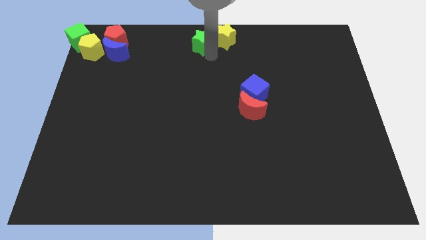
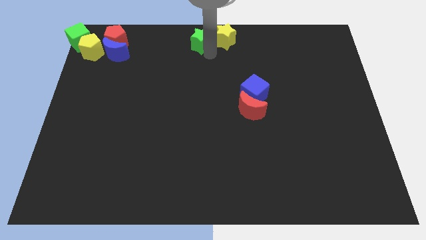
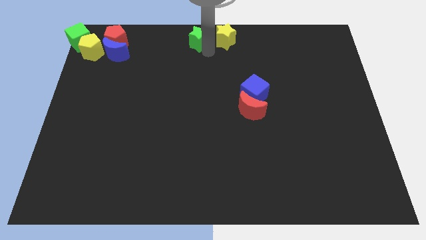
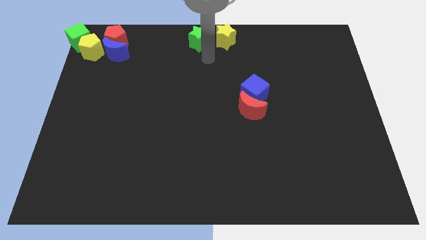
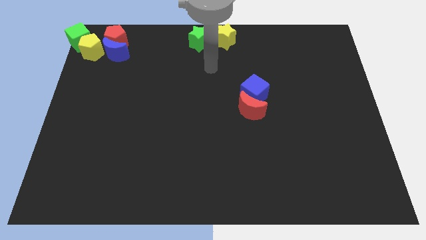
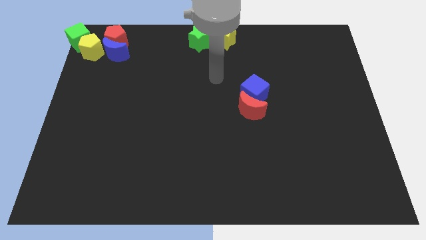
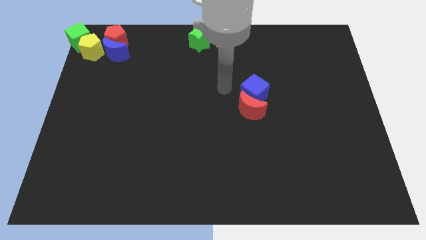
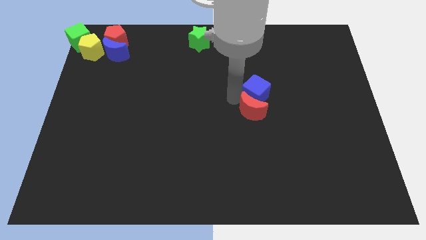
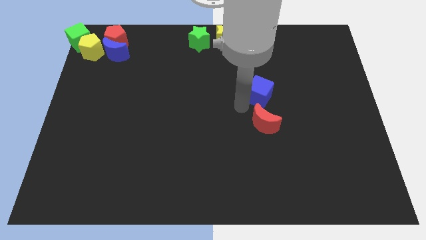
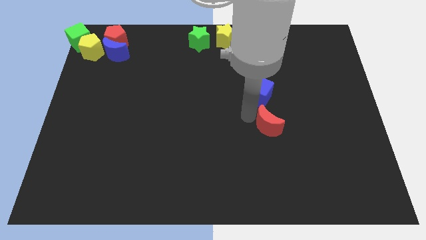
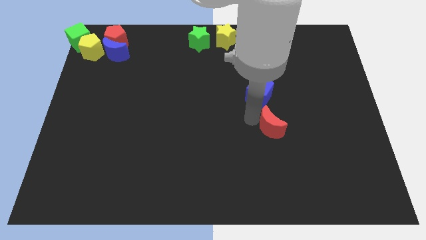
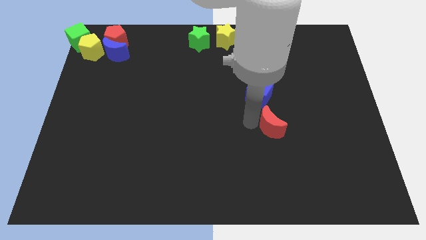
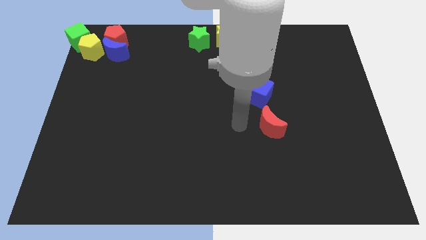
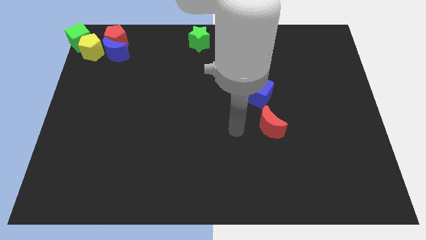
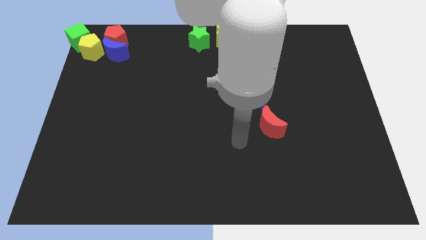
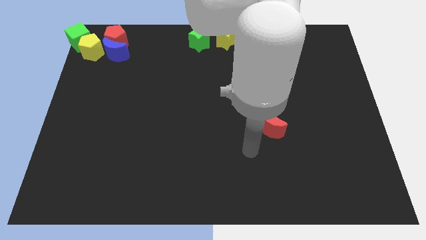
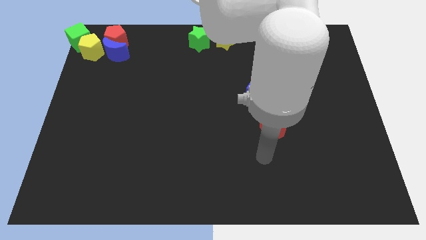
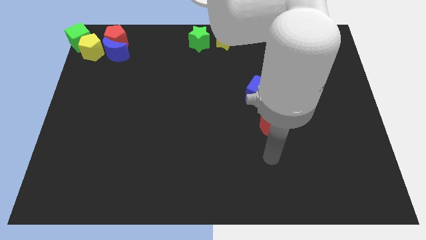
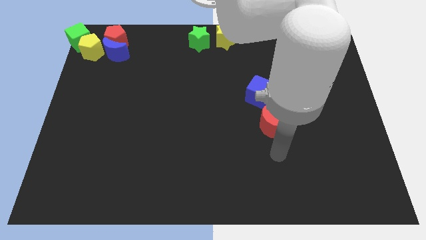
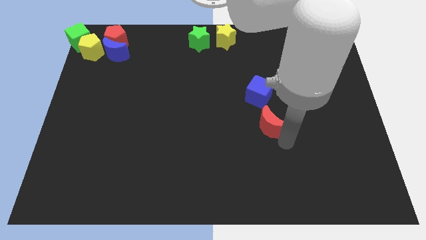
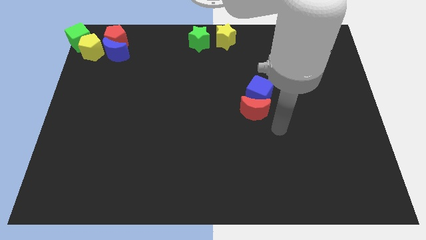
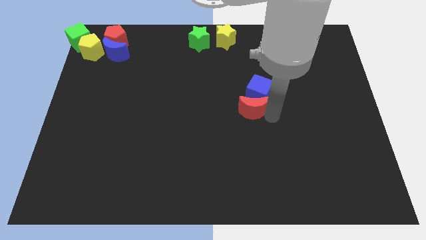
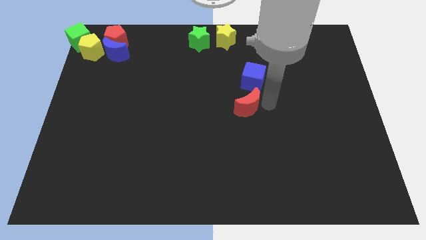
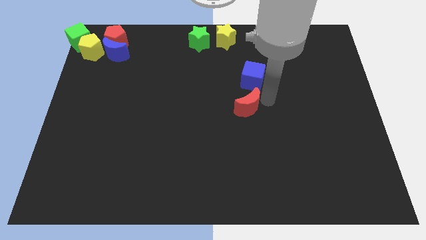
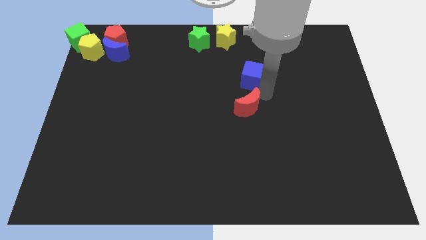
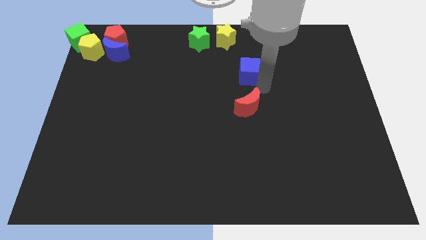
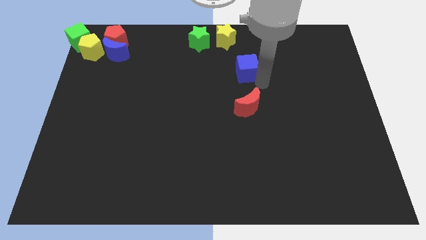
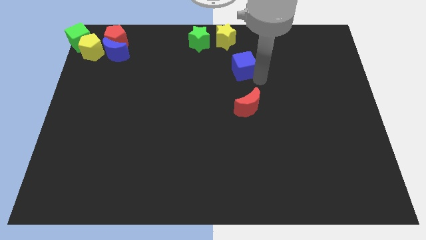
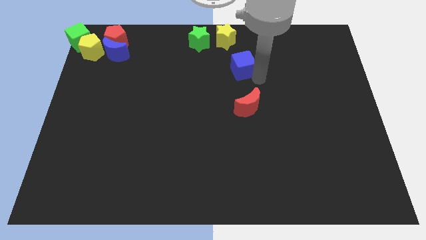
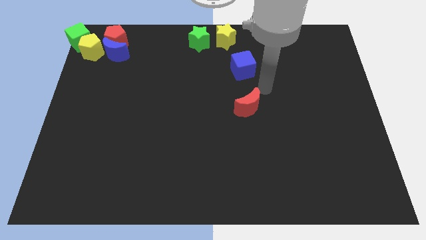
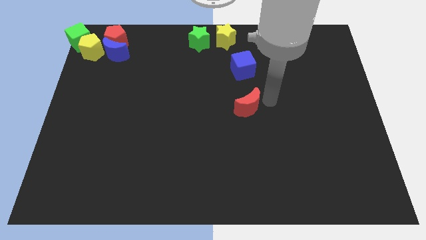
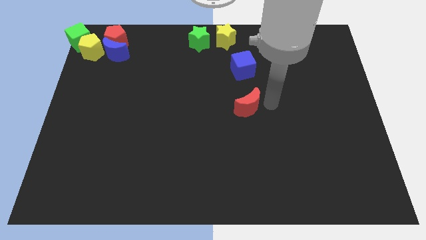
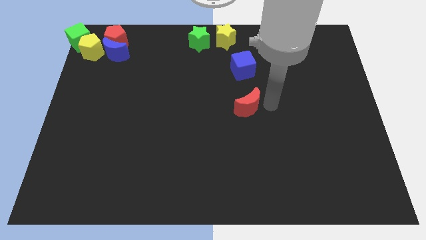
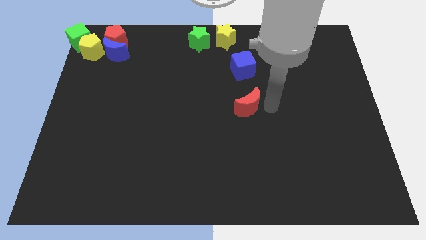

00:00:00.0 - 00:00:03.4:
move the blue cube towards the yellow star

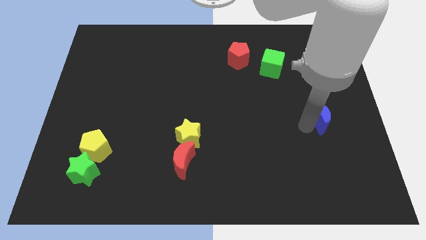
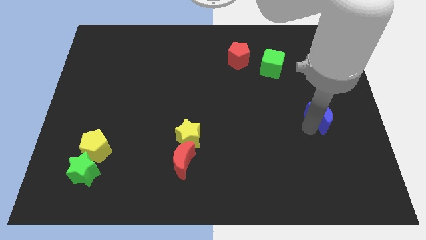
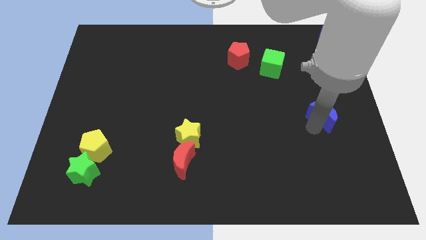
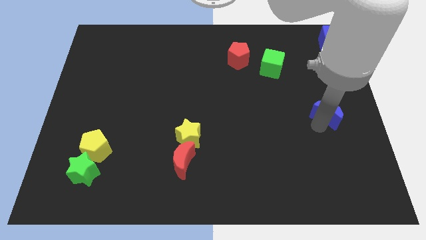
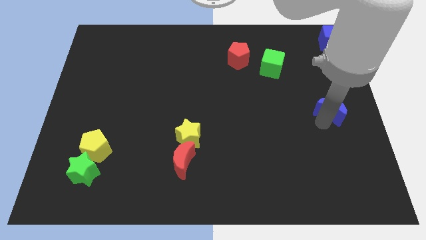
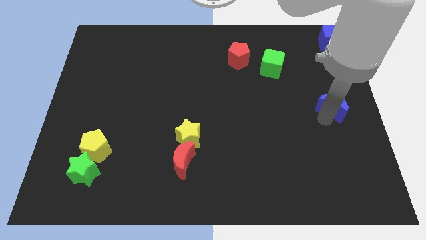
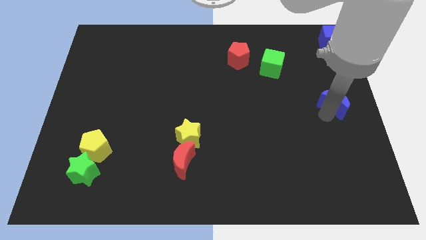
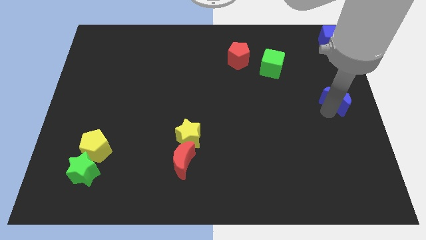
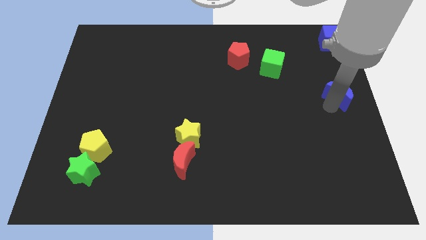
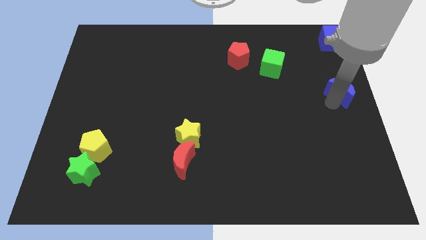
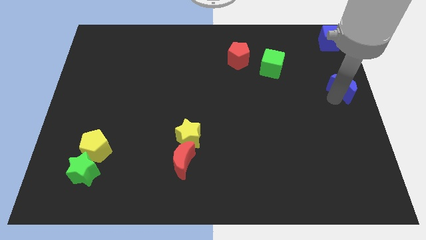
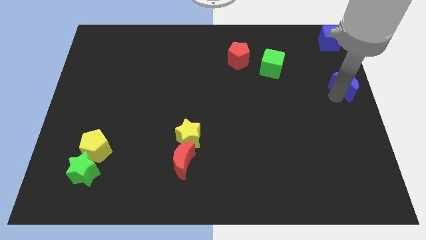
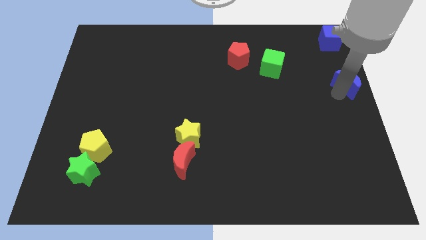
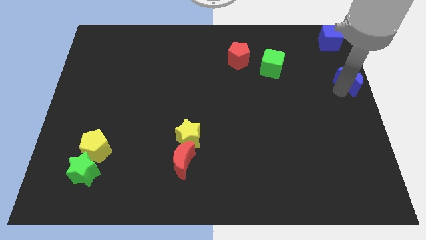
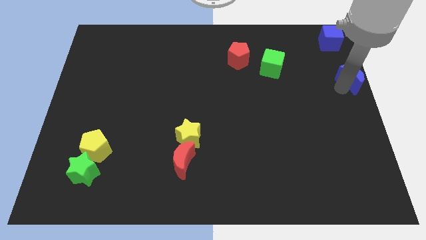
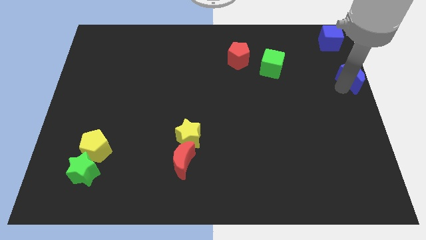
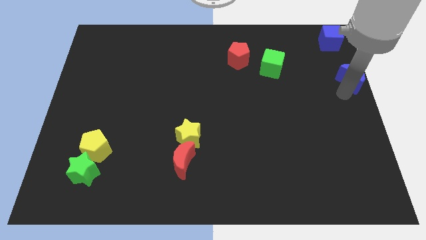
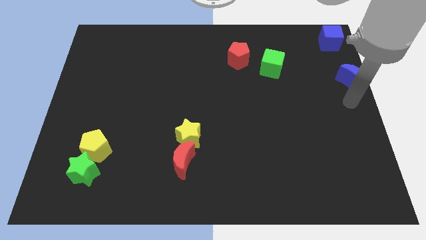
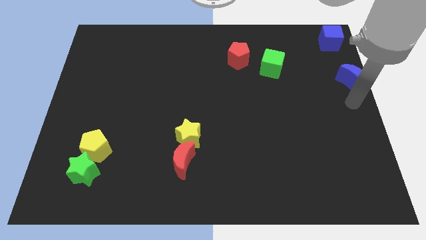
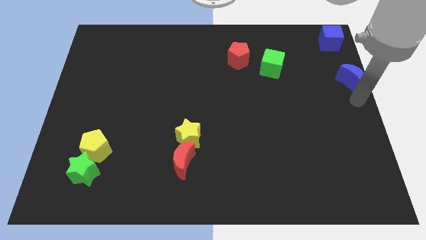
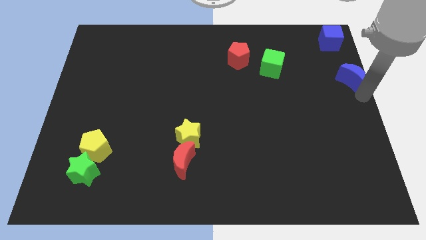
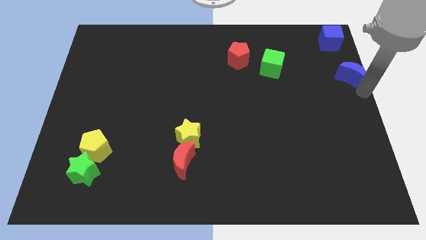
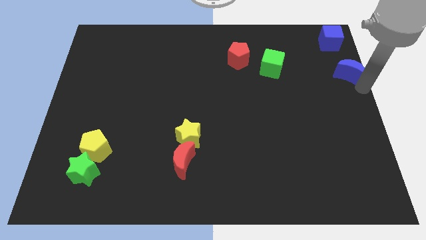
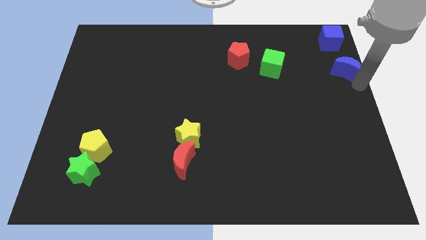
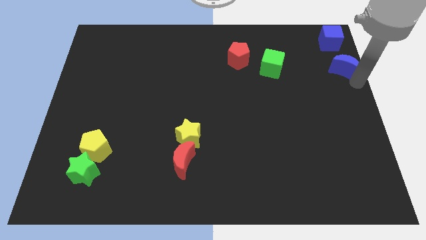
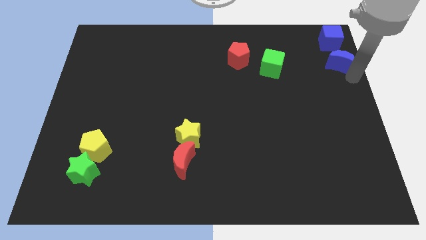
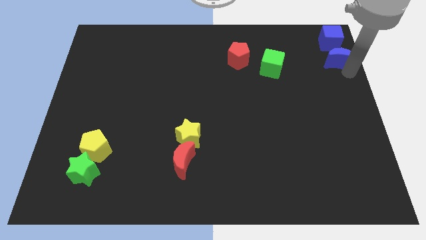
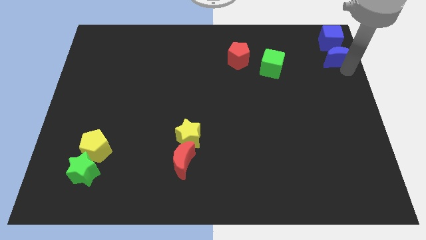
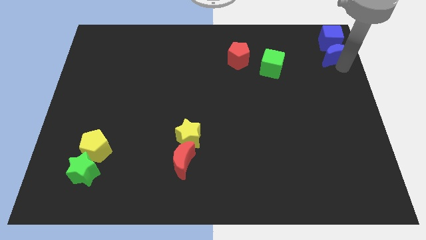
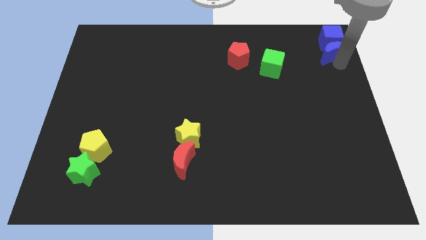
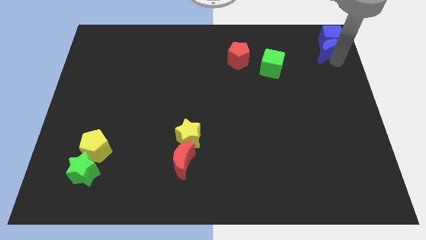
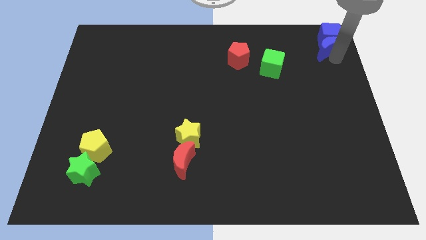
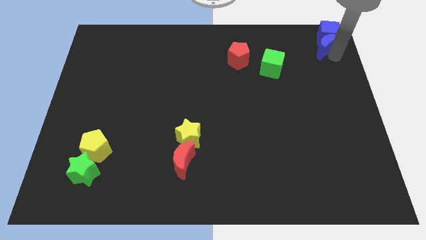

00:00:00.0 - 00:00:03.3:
push the blue moon into the bottom side of the blue cube

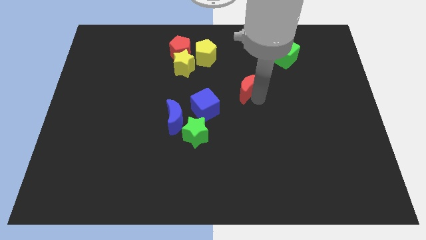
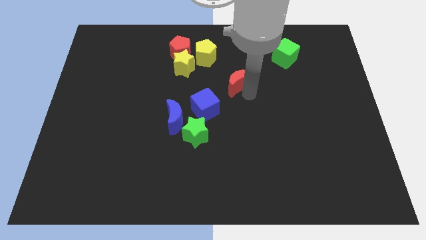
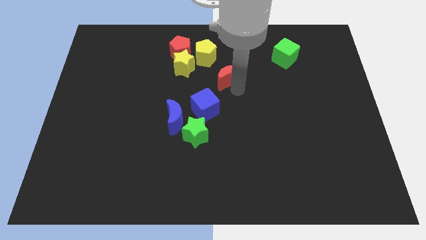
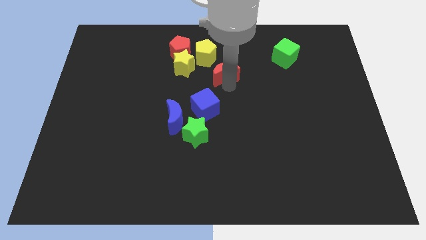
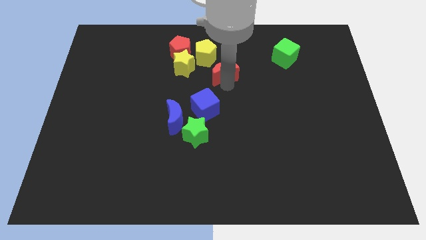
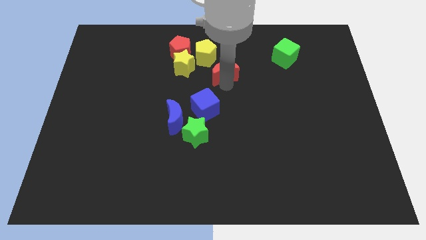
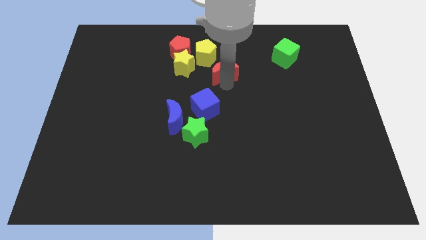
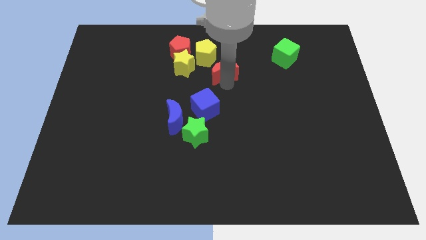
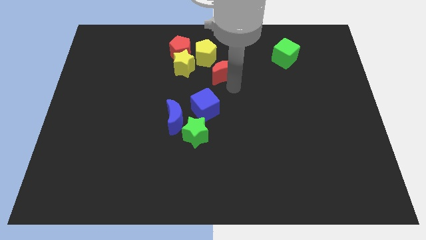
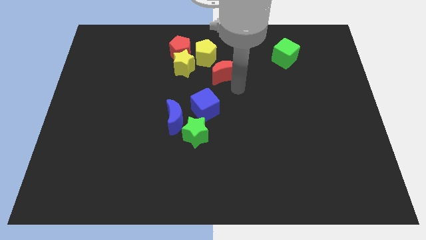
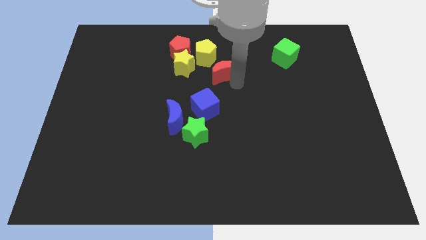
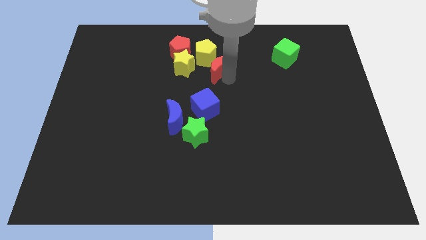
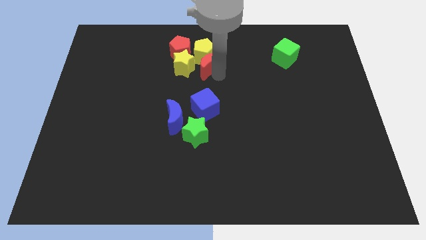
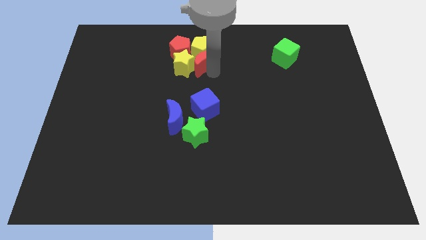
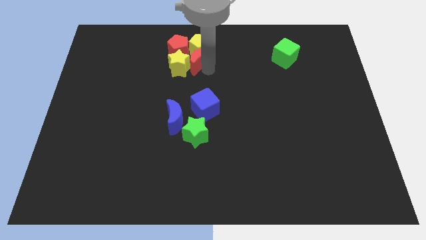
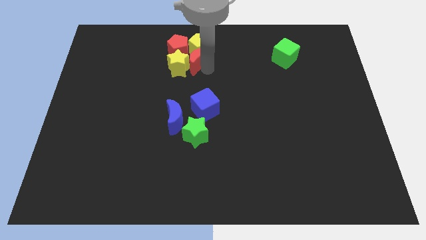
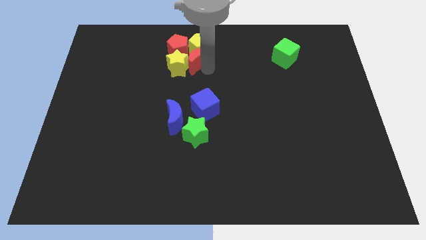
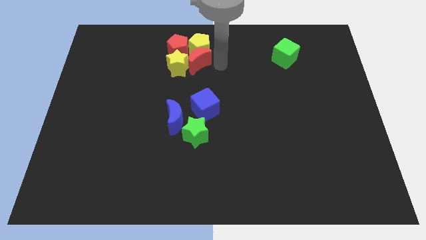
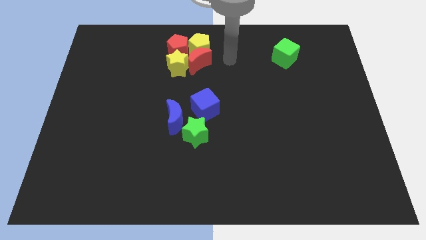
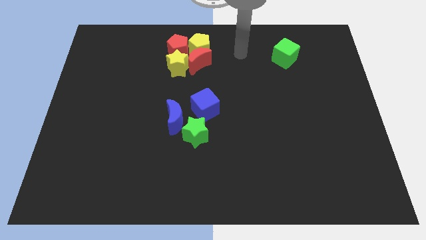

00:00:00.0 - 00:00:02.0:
arrange the red moon right side of the yellow star

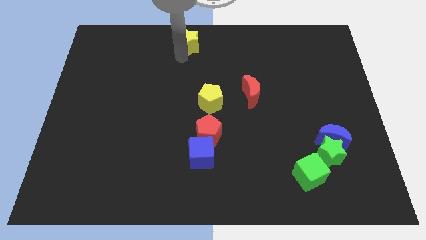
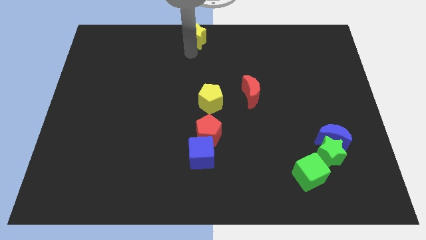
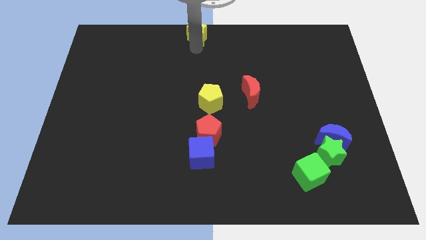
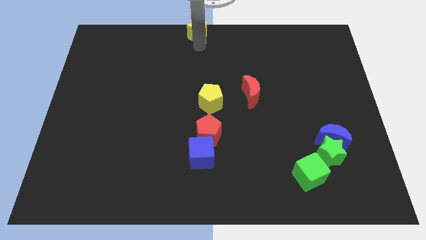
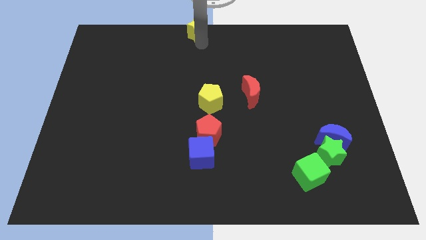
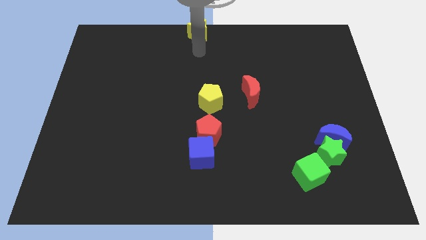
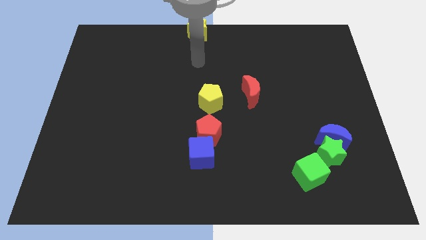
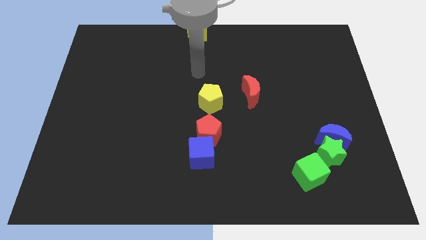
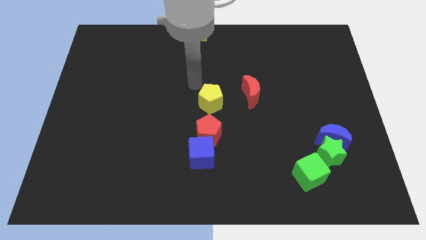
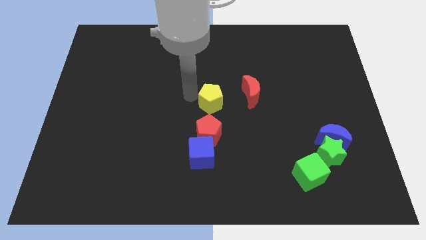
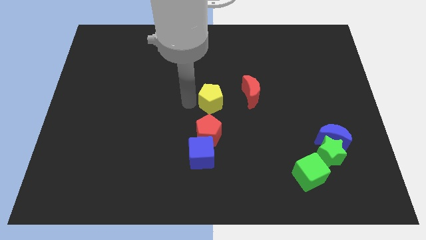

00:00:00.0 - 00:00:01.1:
move your arm away from yellow star
